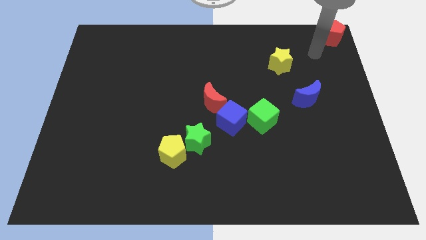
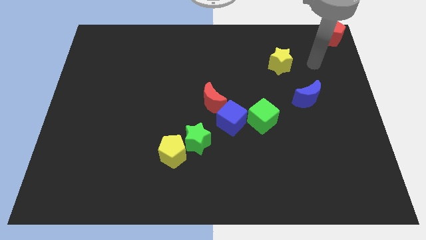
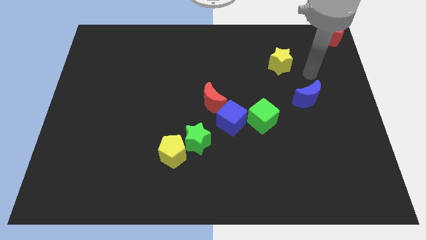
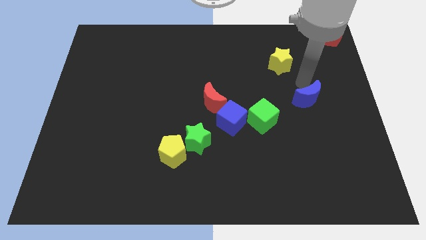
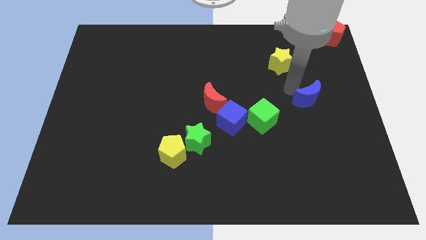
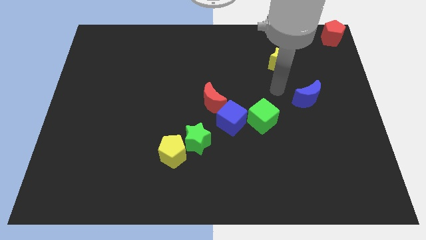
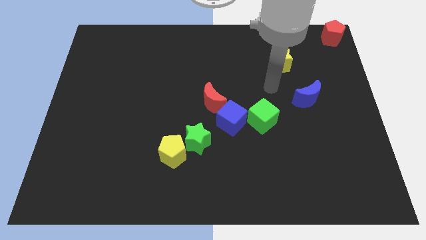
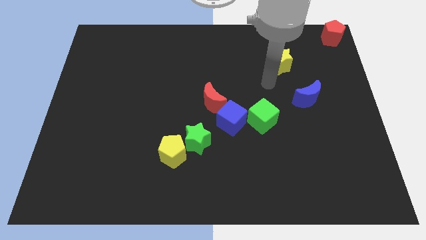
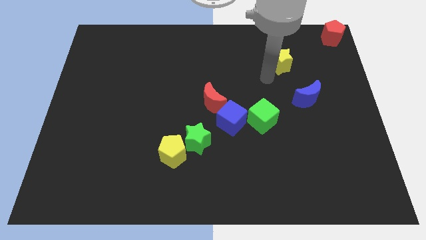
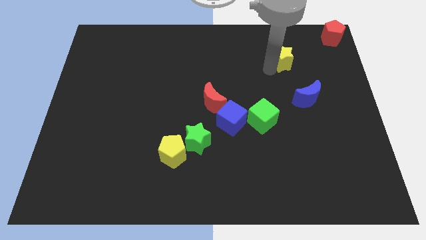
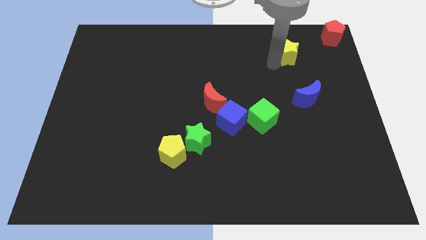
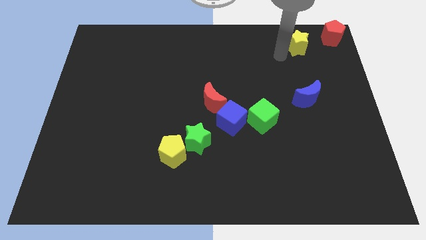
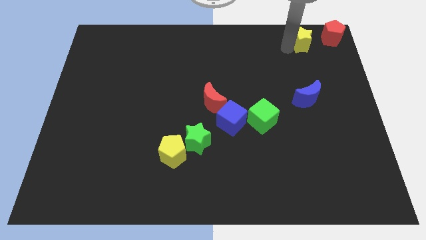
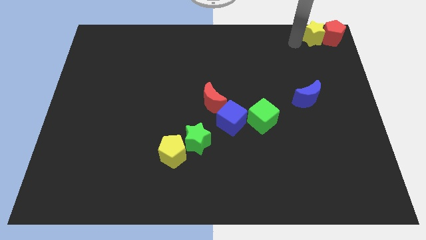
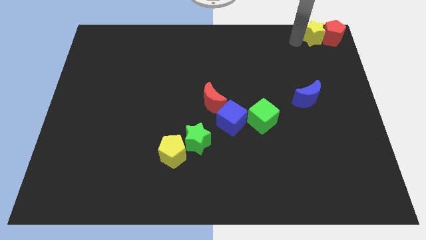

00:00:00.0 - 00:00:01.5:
push the yellow star into the red pentagon

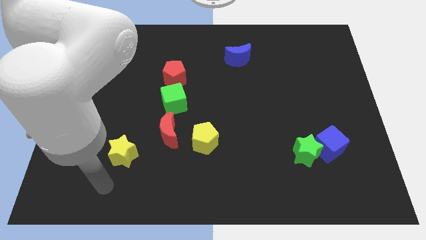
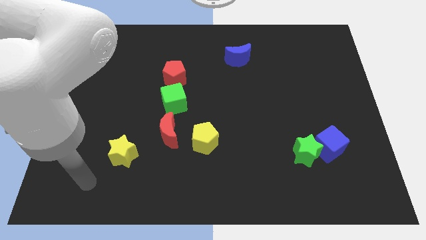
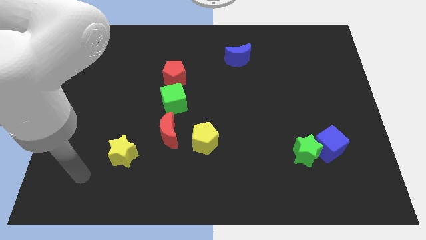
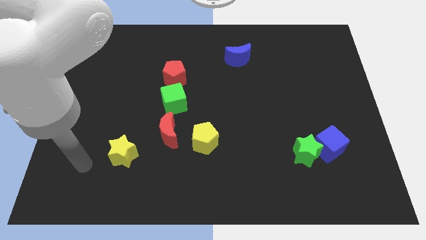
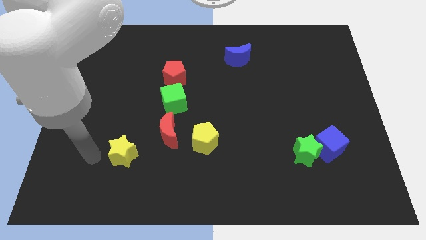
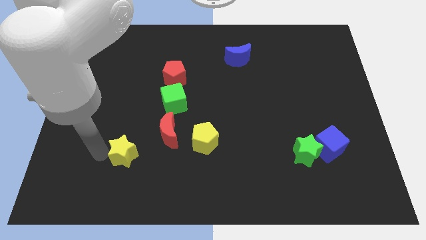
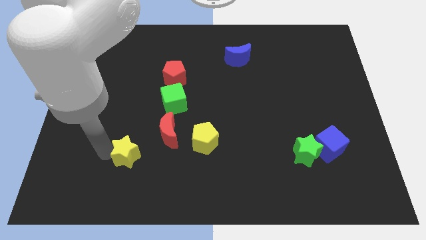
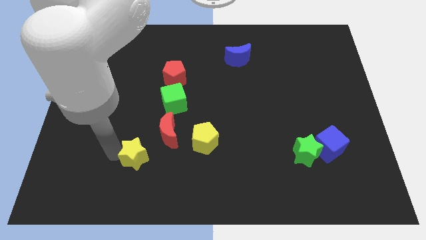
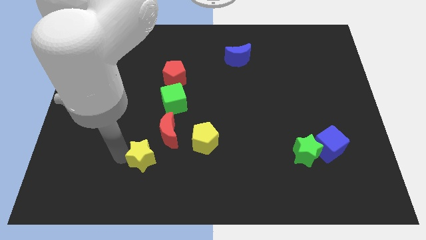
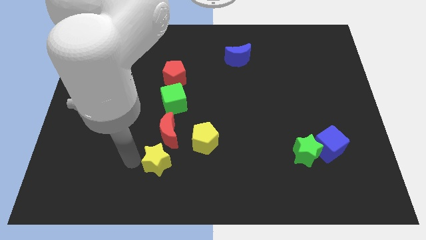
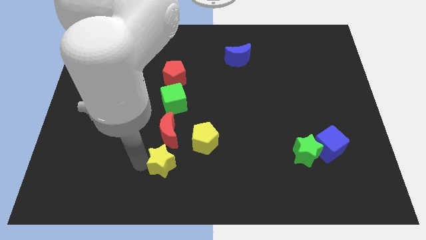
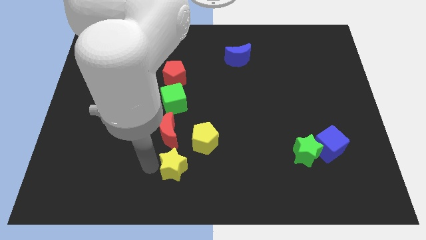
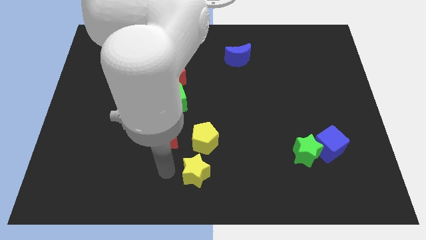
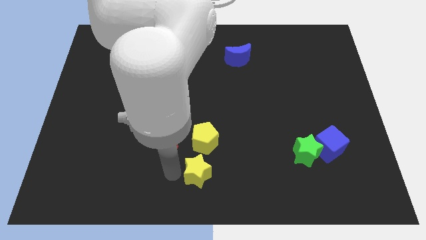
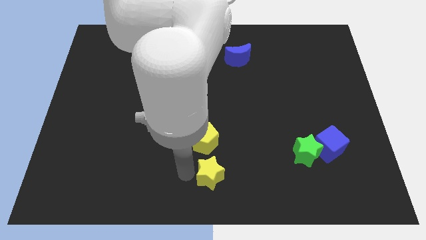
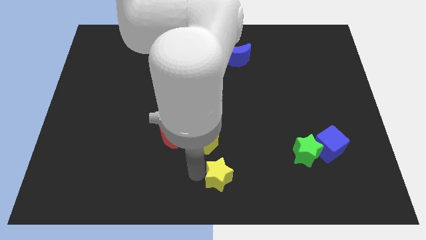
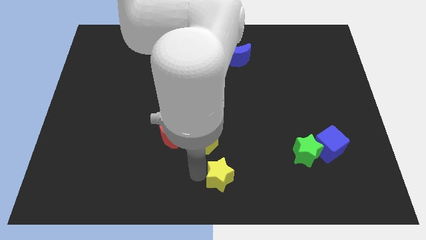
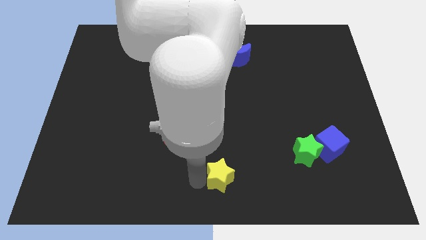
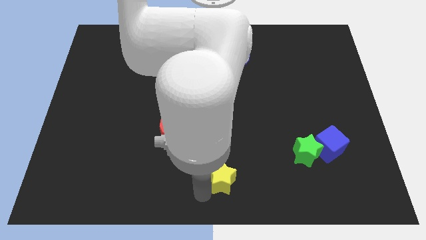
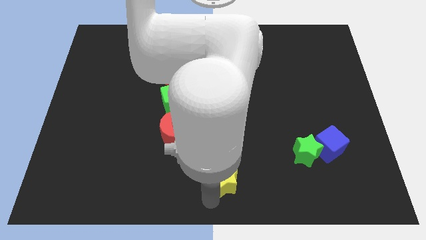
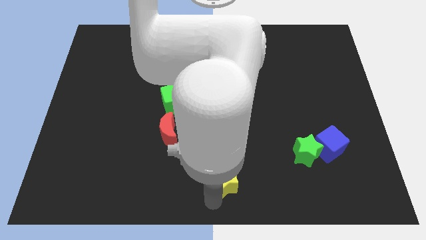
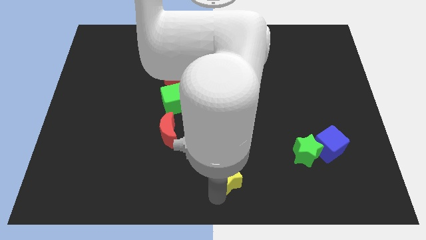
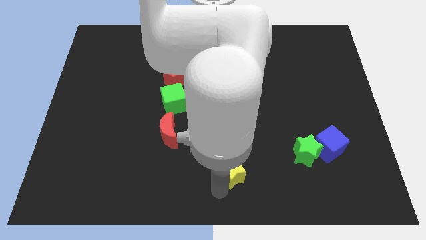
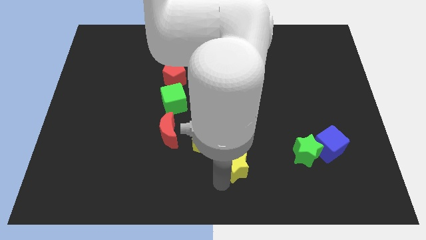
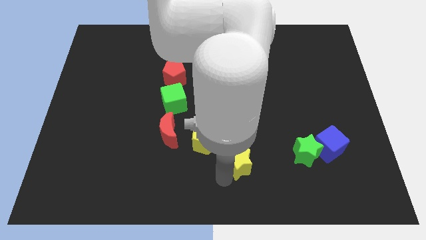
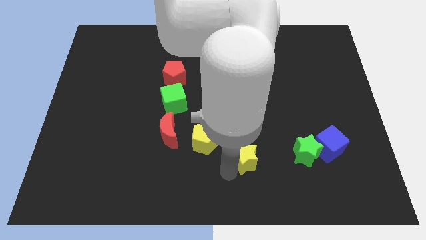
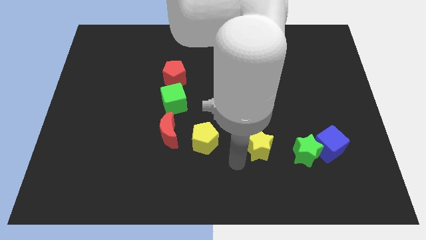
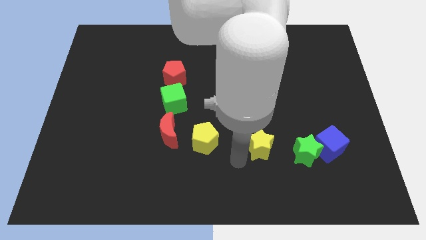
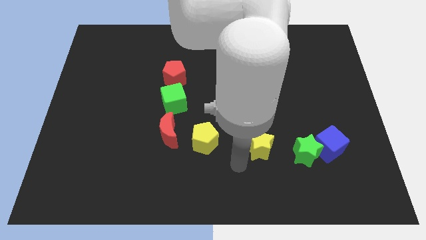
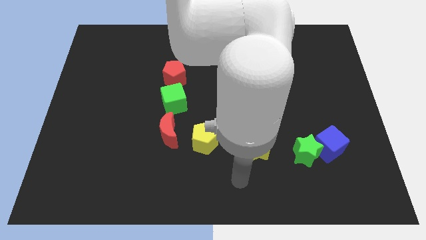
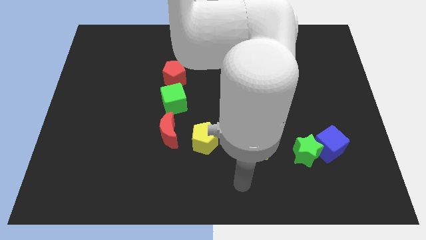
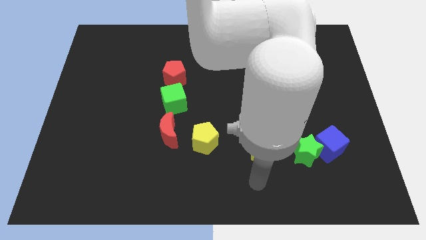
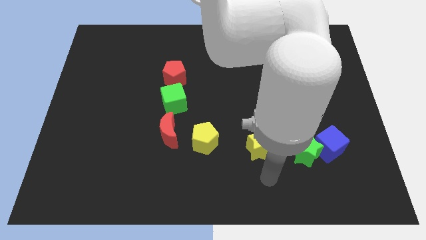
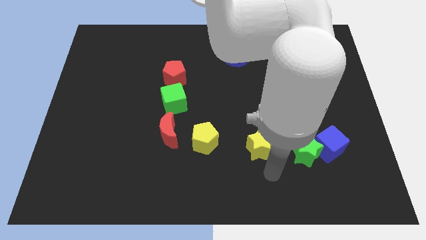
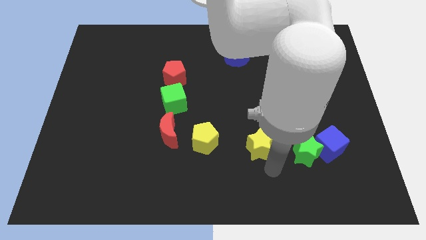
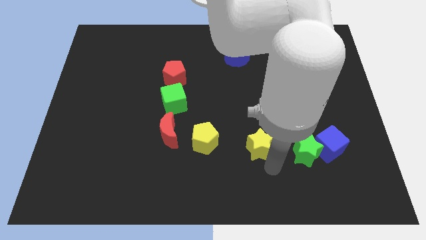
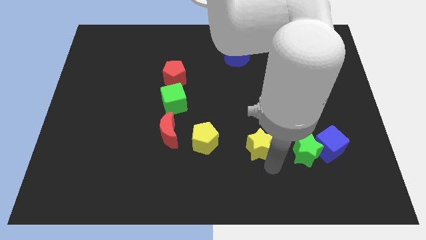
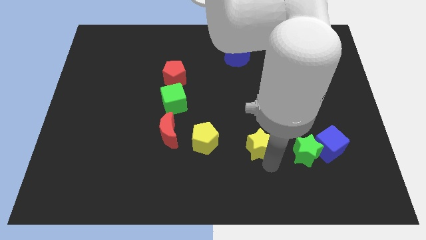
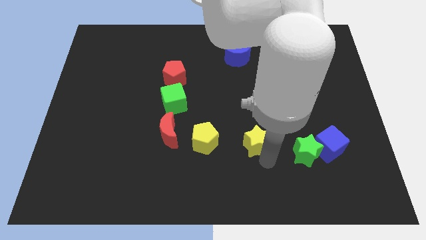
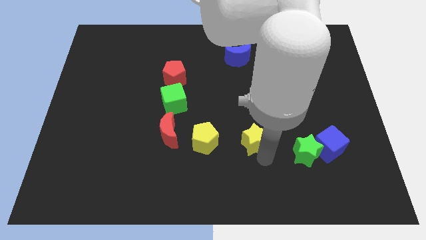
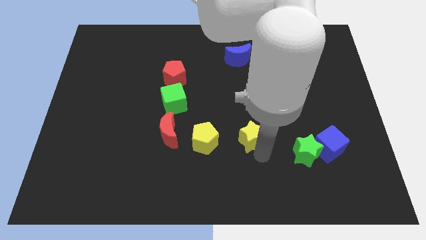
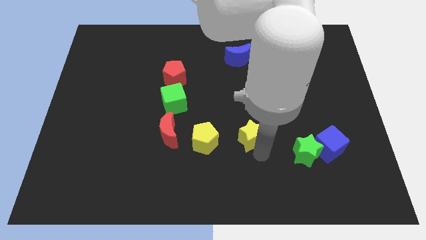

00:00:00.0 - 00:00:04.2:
push the yellow star to the right of yellow pentagon

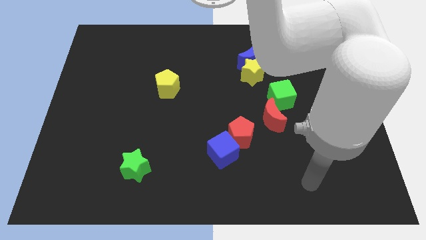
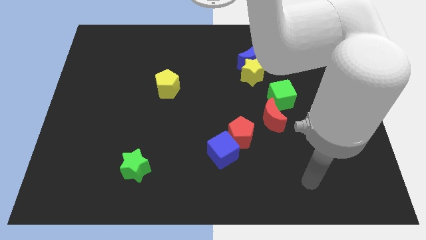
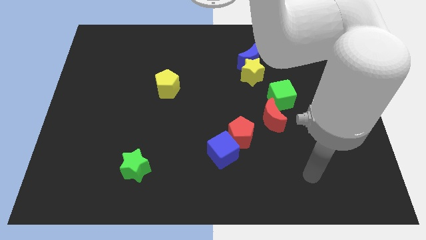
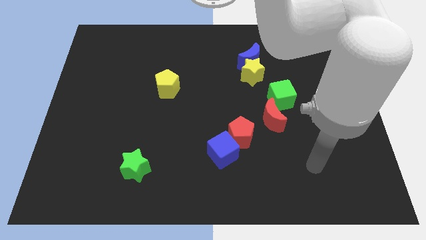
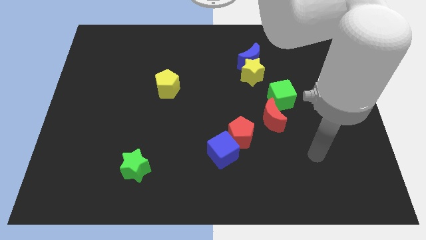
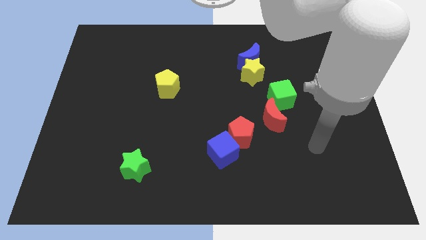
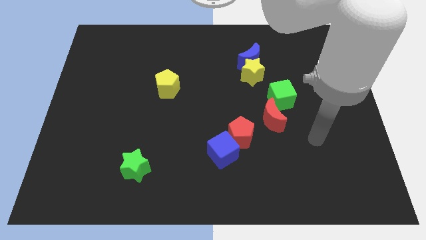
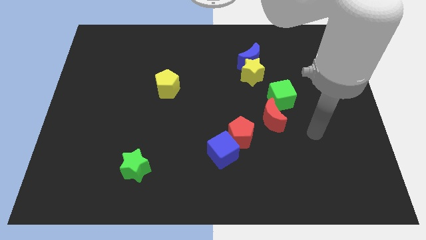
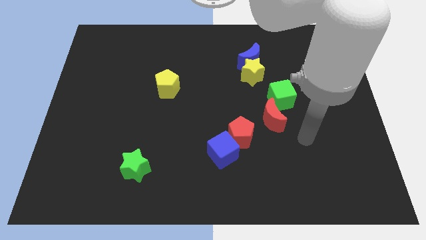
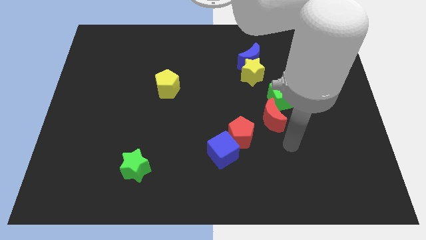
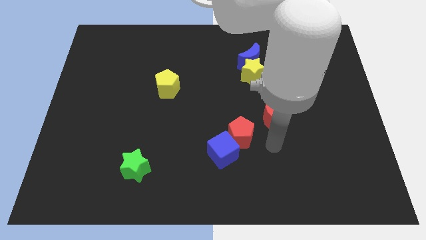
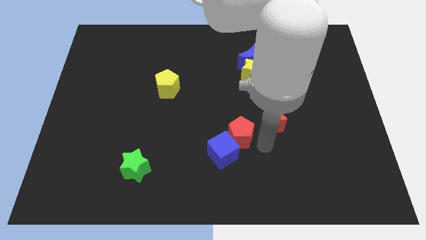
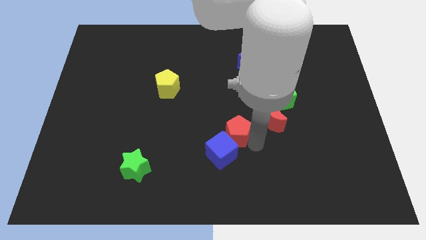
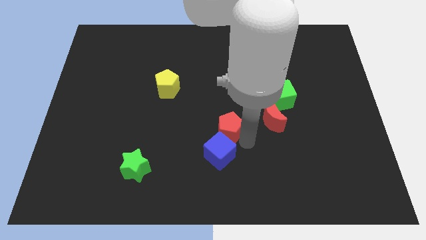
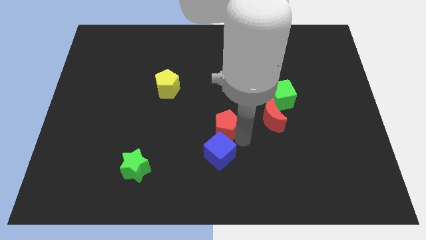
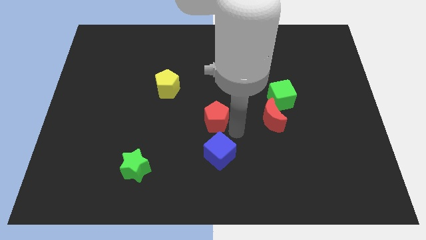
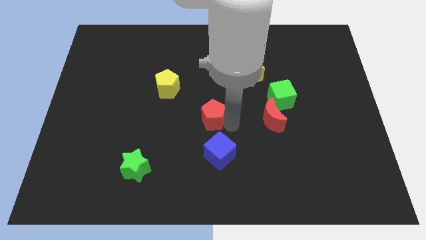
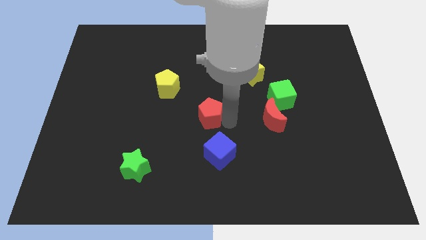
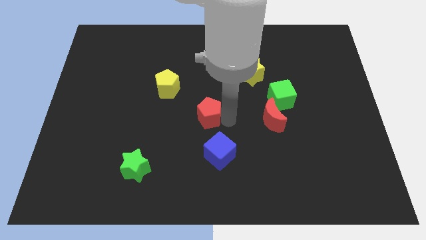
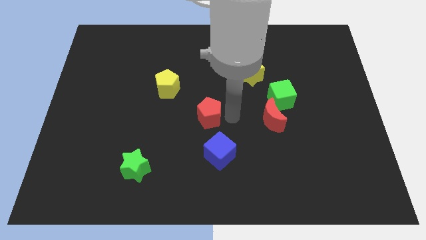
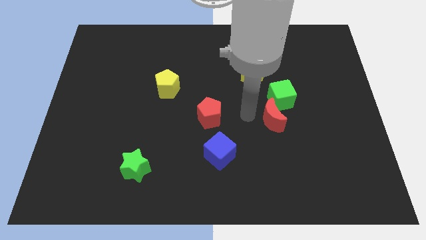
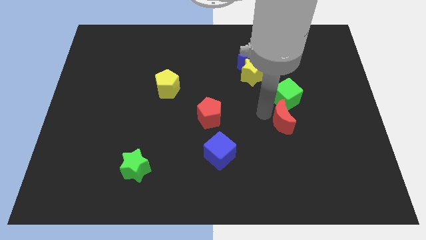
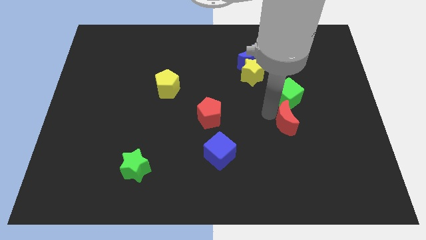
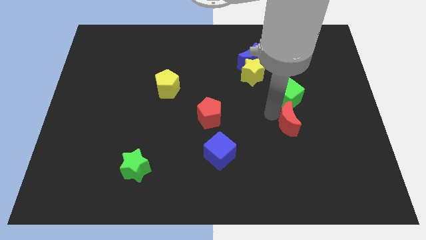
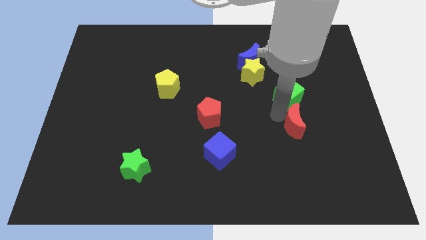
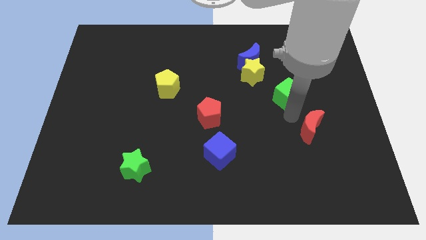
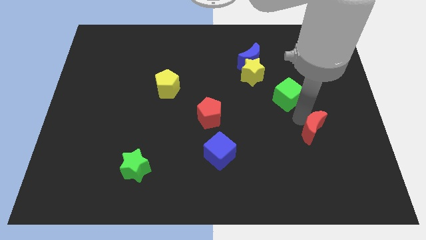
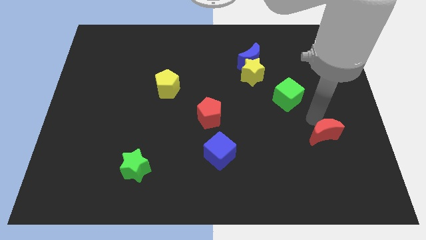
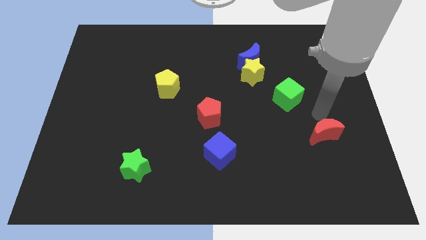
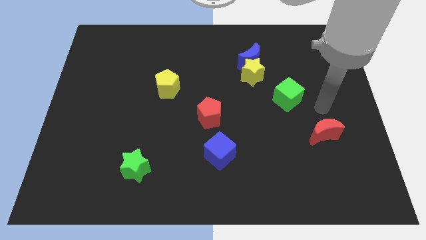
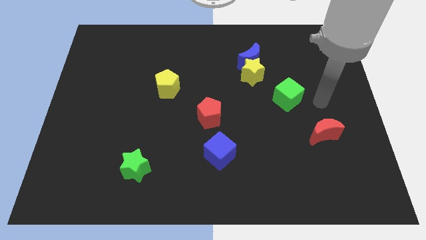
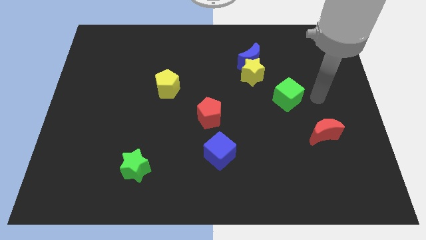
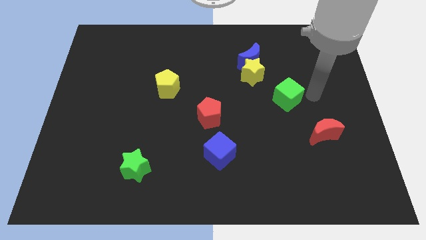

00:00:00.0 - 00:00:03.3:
push the red pentagon and red moon in opposite directions

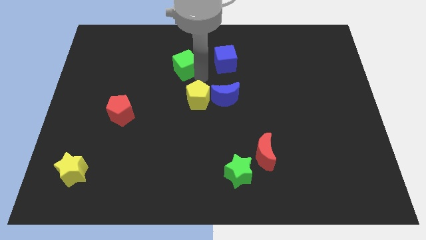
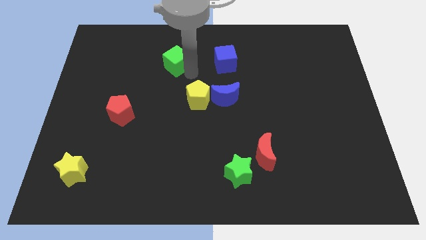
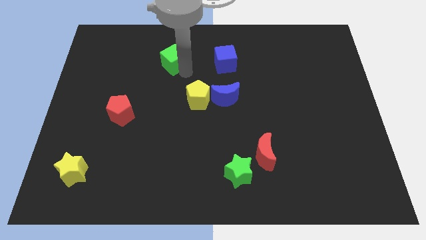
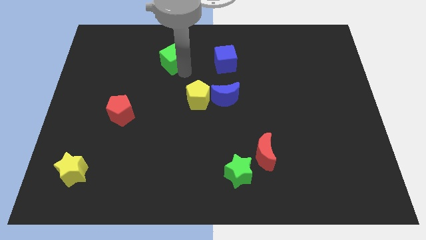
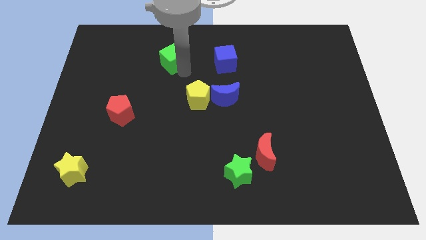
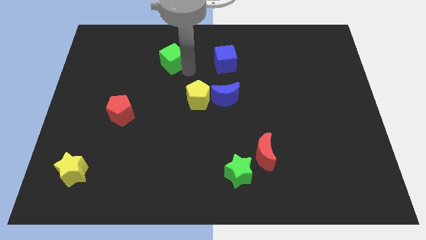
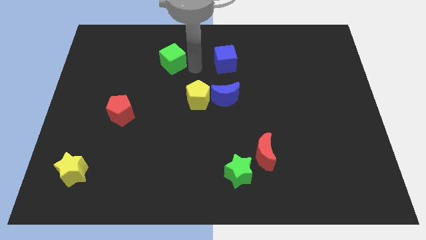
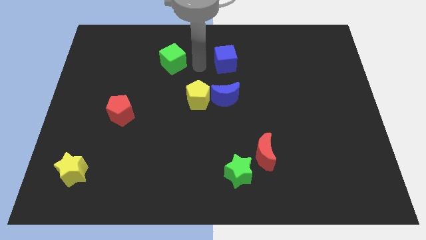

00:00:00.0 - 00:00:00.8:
place arm in between green cube and blue cube
